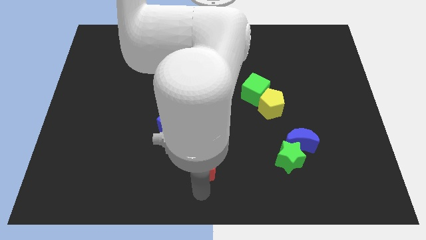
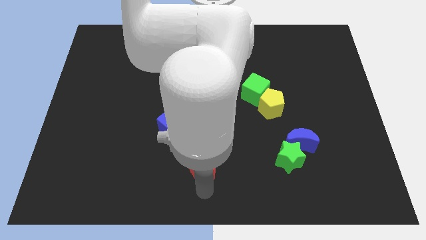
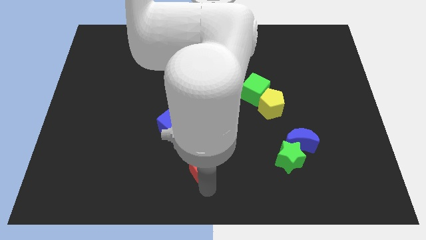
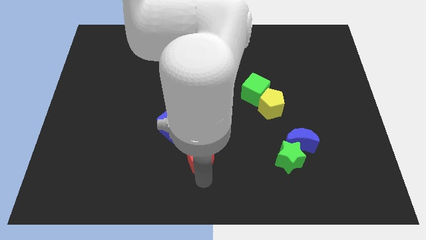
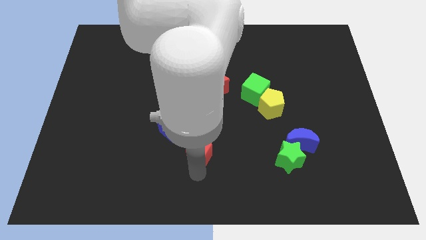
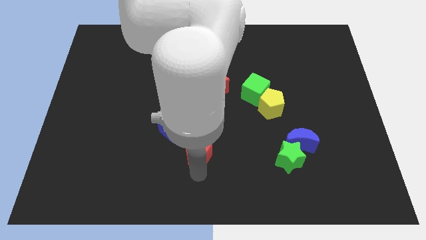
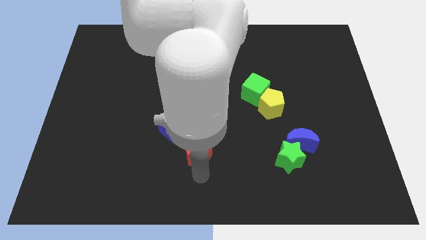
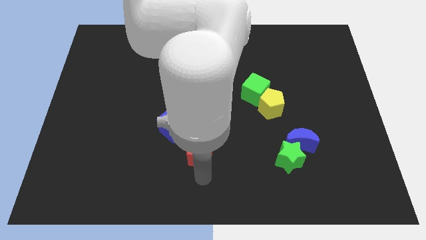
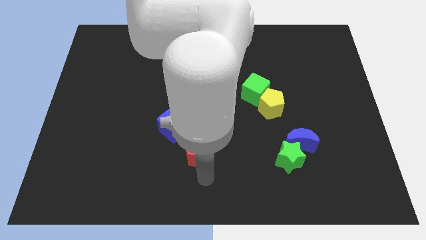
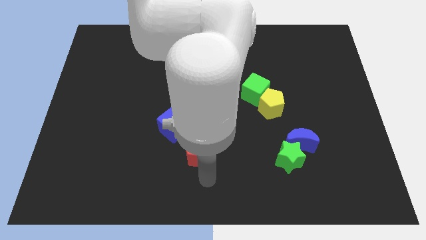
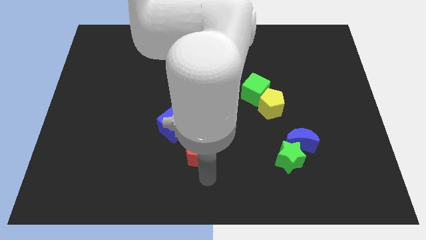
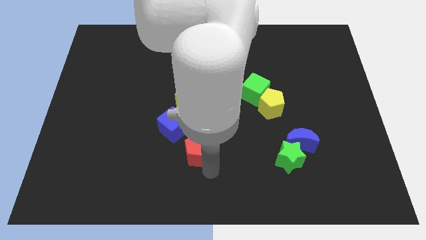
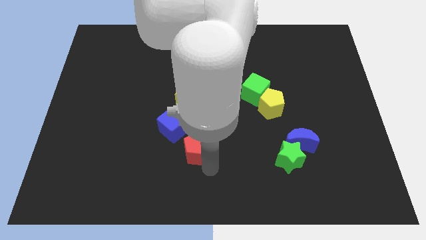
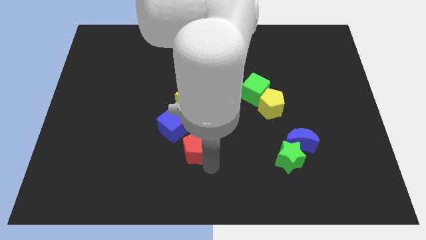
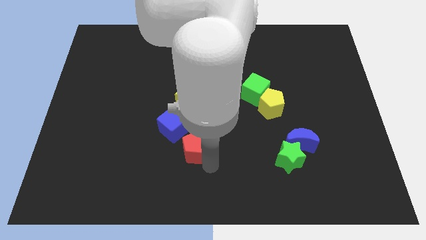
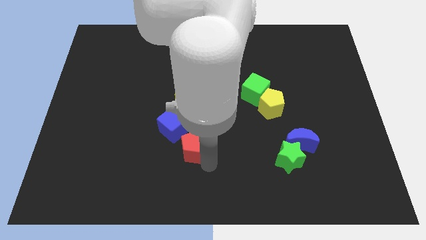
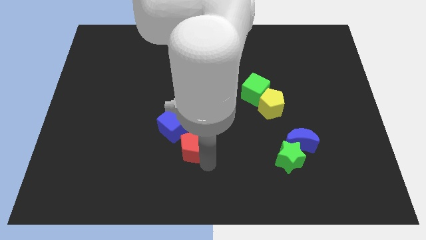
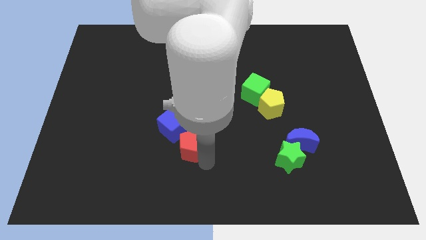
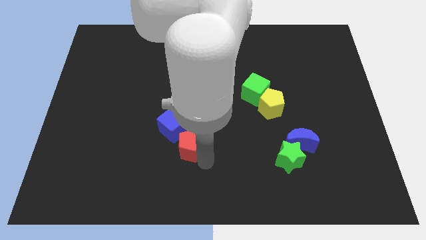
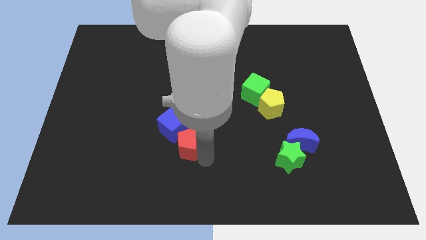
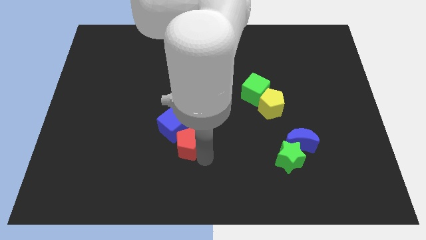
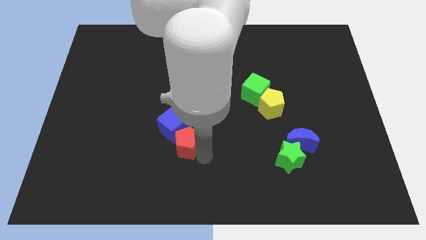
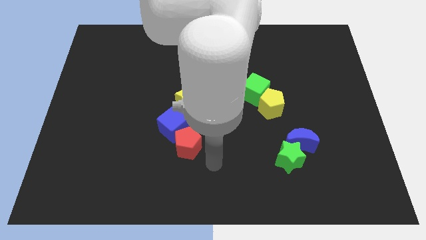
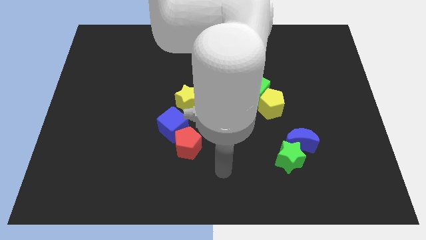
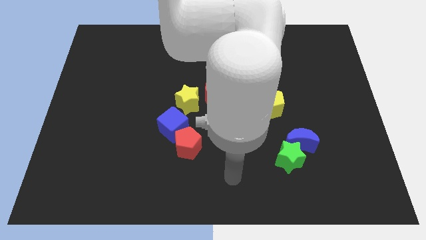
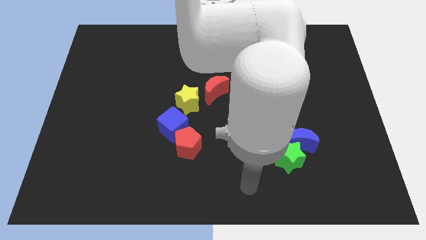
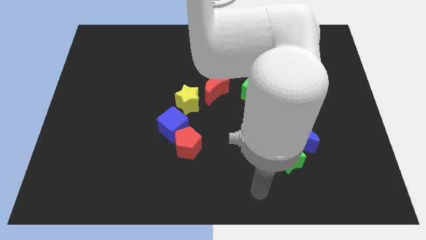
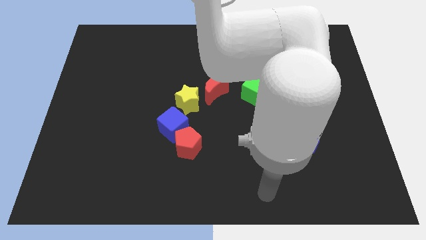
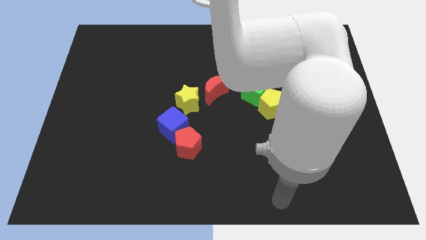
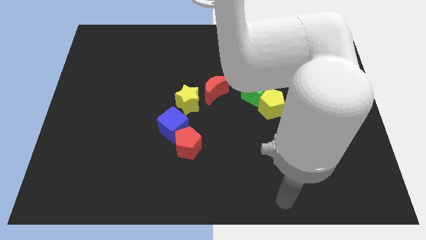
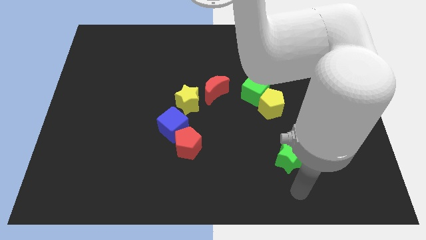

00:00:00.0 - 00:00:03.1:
push red moon into blue cube

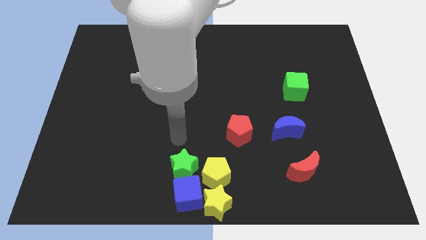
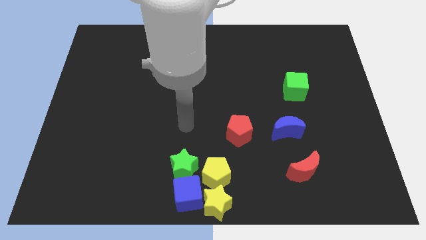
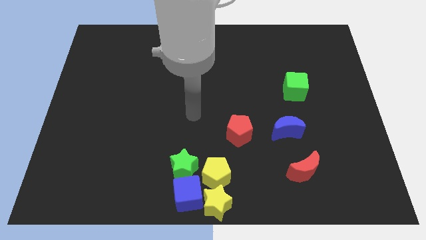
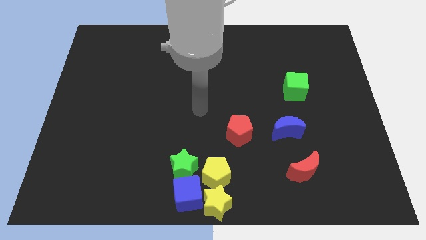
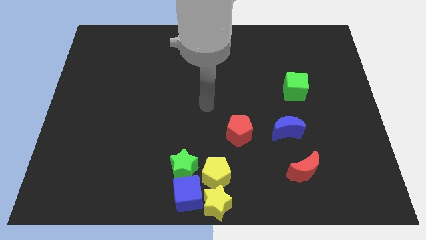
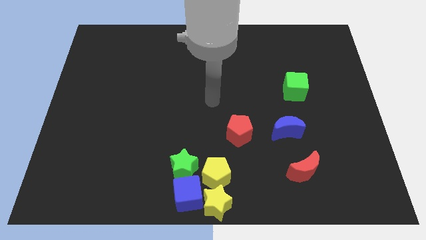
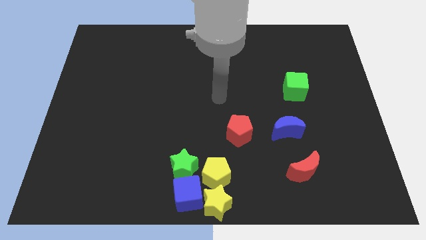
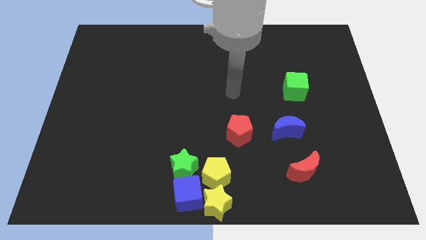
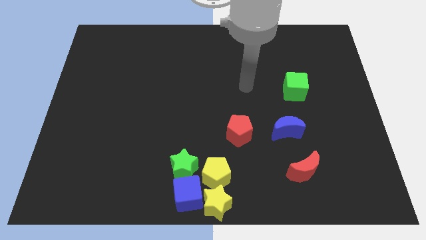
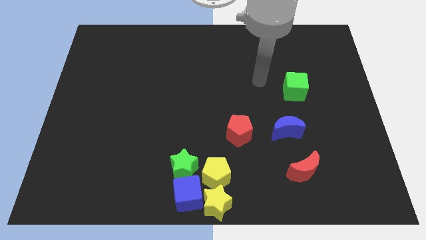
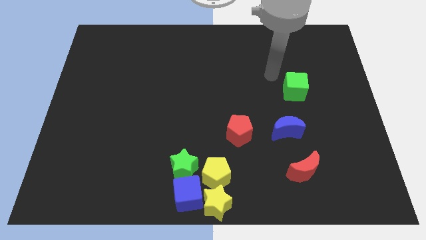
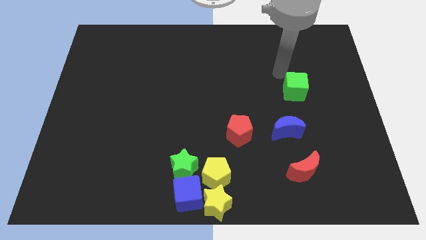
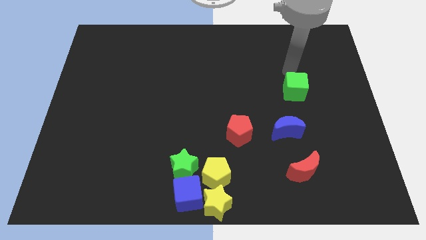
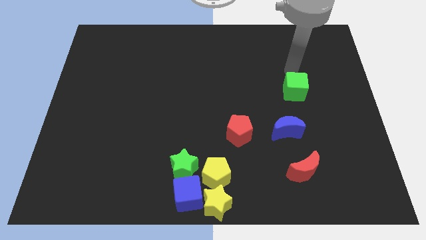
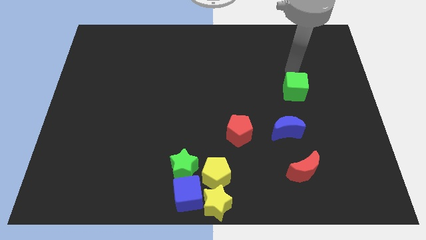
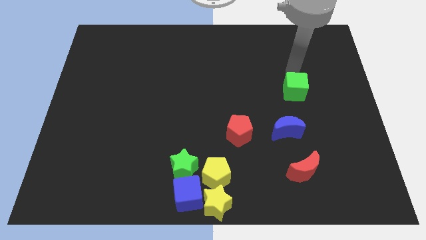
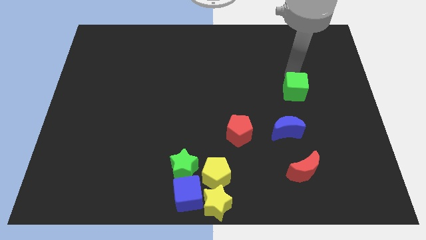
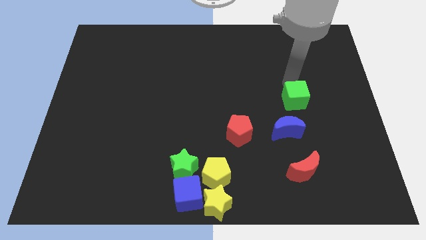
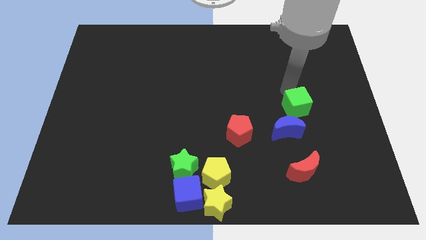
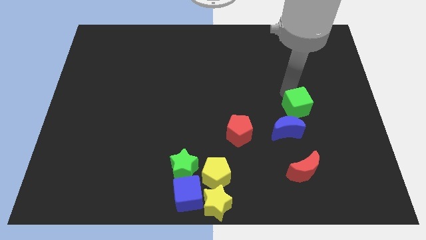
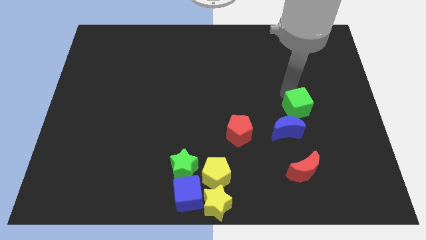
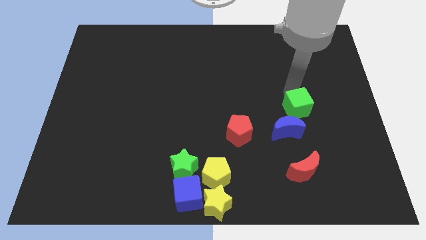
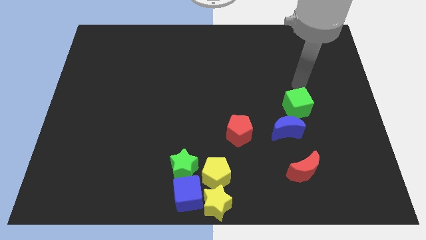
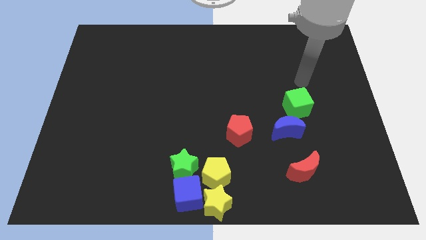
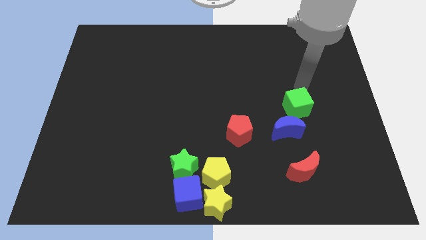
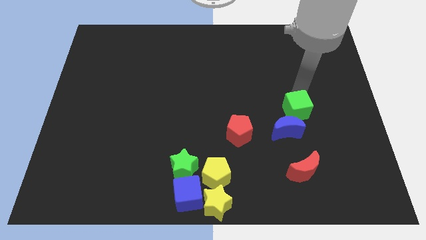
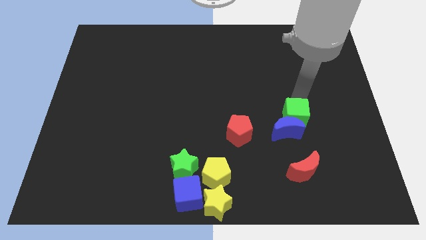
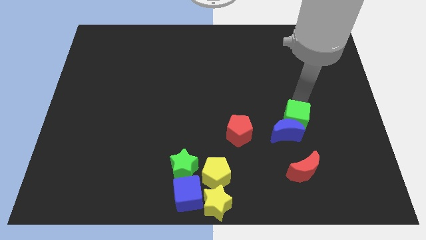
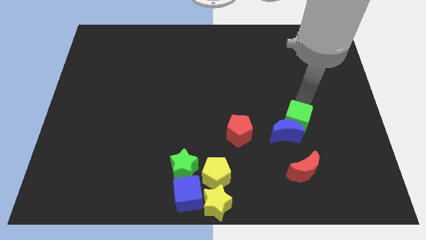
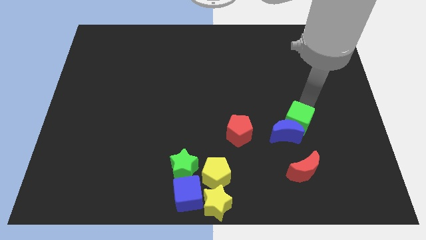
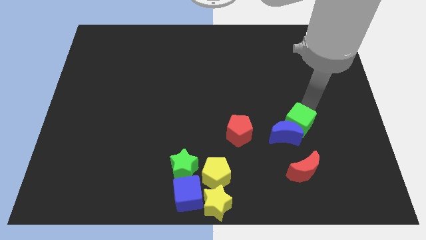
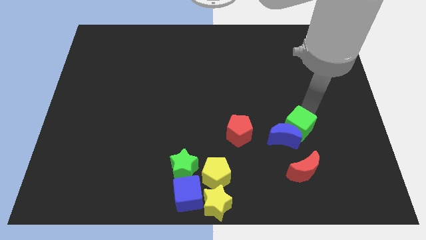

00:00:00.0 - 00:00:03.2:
push the green cube into the blue moon

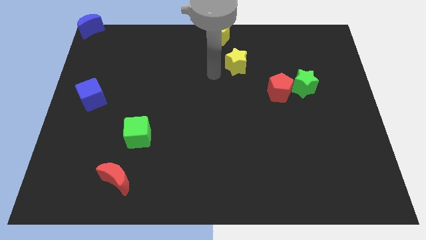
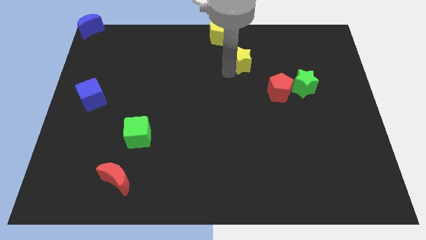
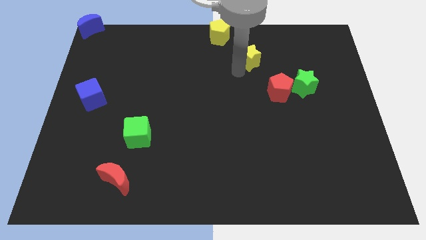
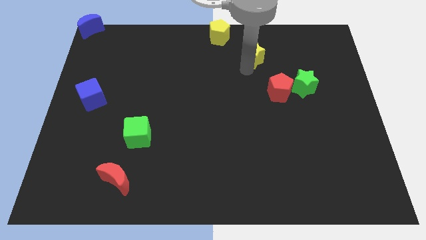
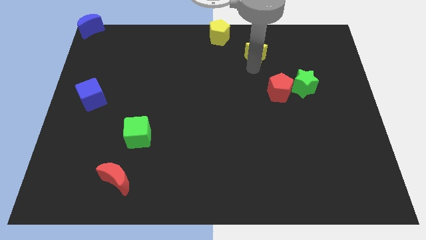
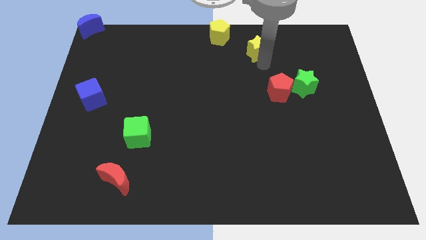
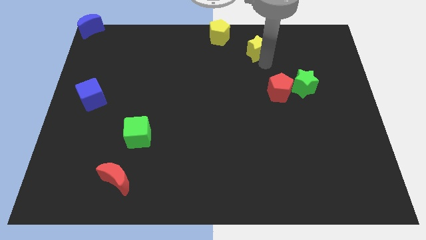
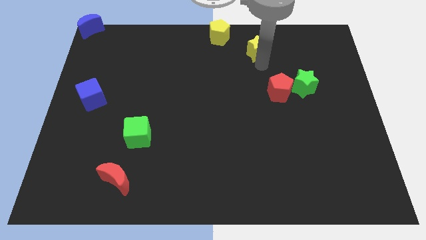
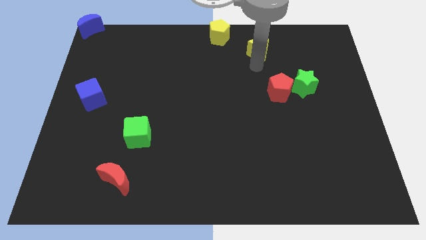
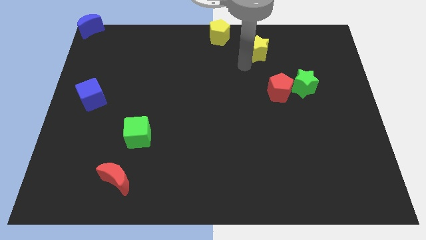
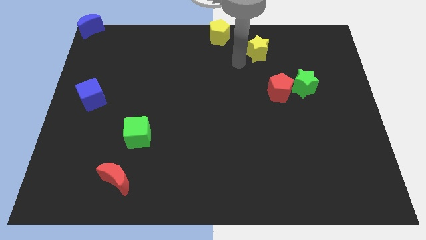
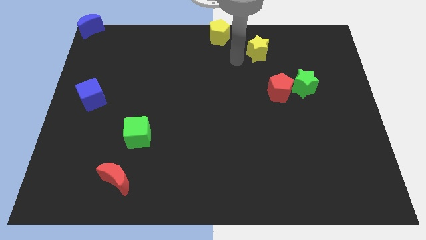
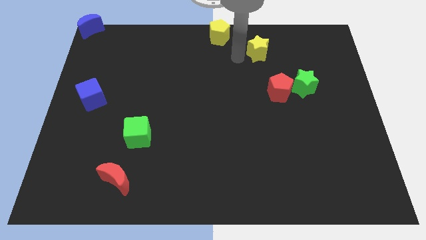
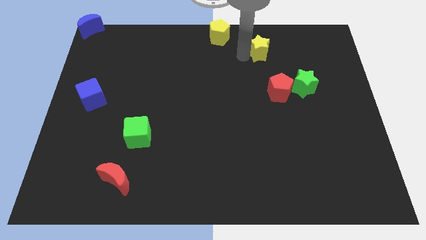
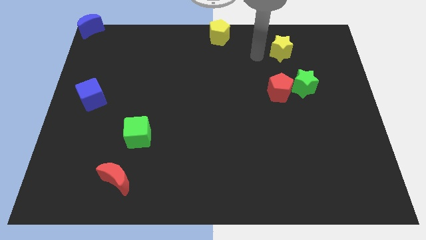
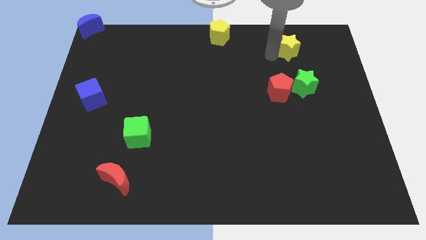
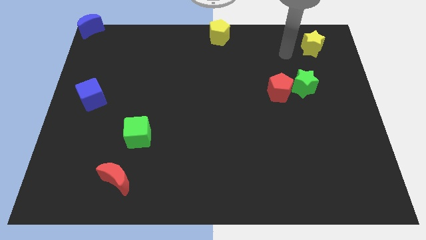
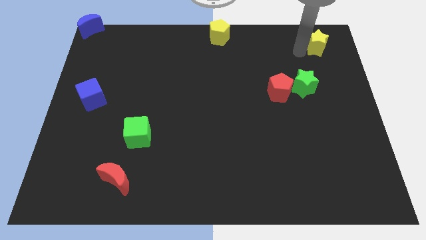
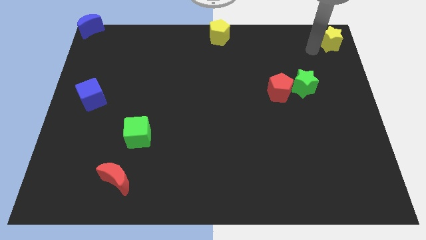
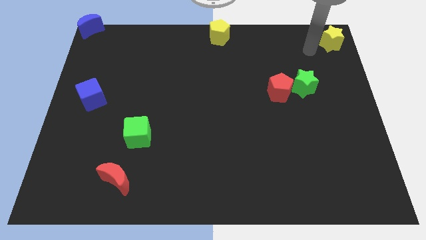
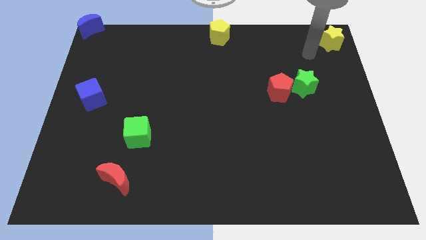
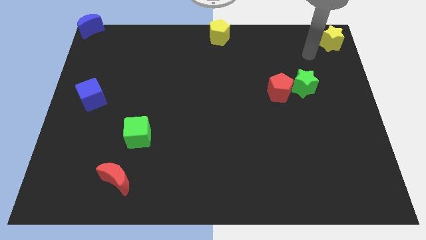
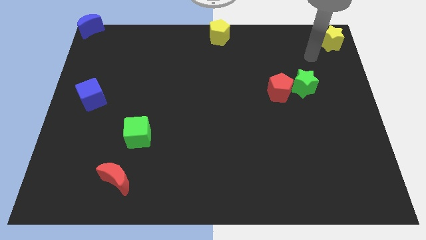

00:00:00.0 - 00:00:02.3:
move the yellow star towards the top right

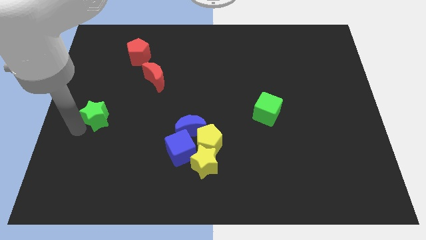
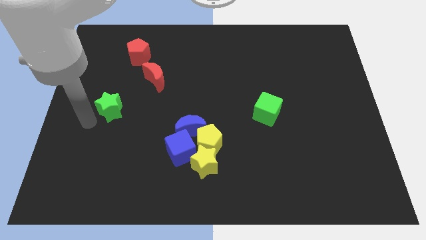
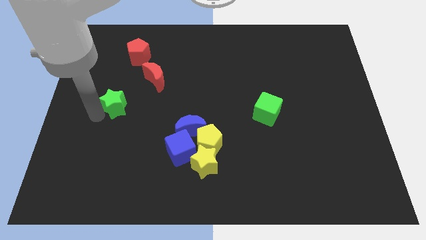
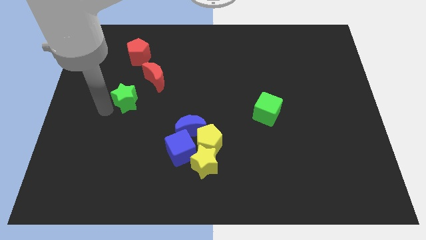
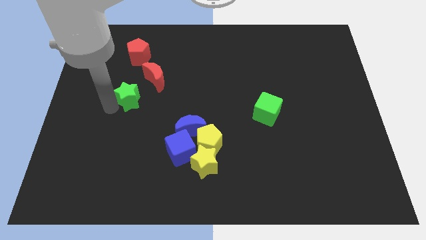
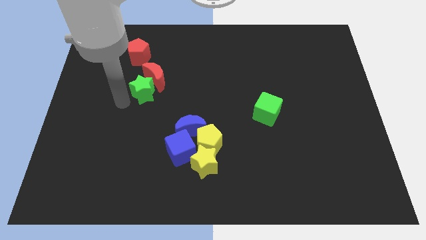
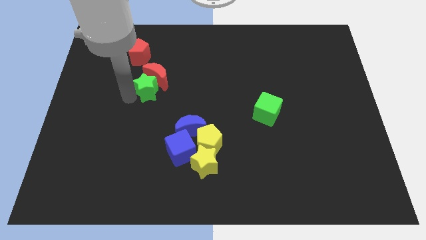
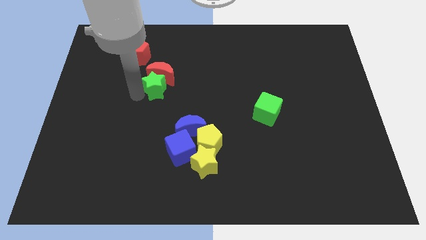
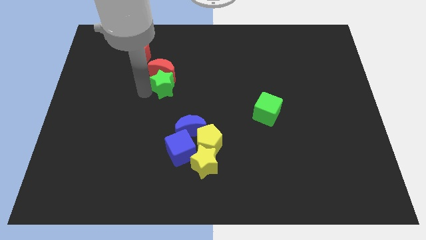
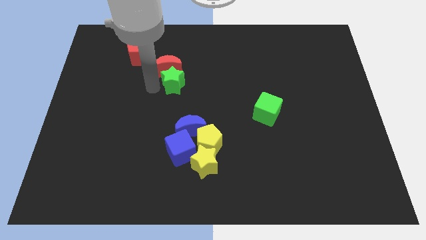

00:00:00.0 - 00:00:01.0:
place green star below red crescent
